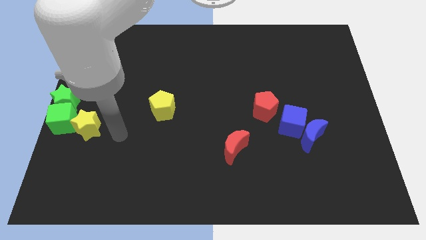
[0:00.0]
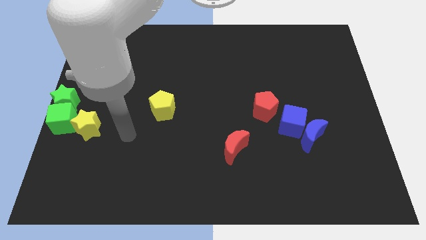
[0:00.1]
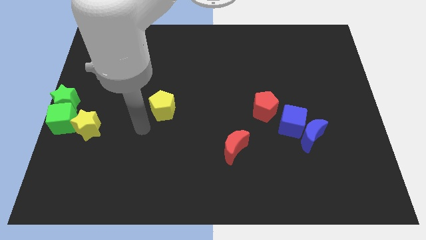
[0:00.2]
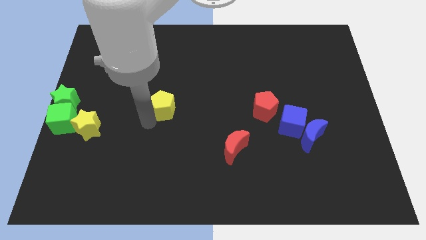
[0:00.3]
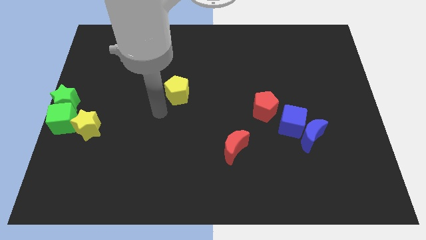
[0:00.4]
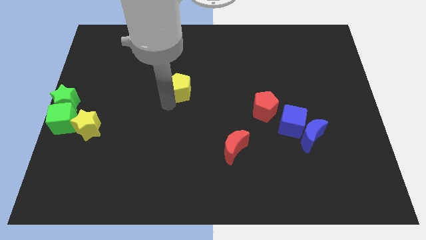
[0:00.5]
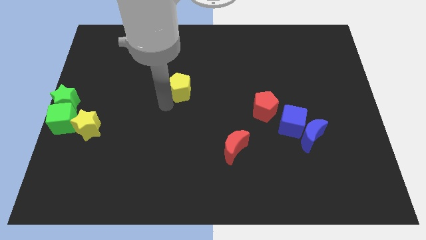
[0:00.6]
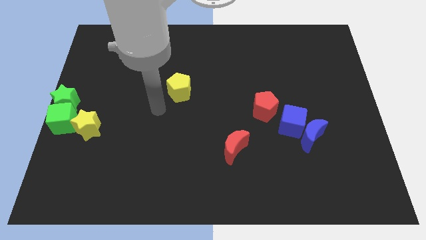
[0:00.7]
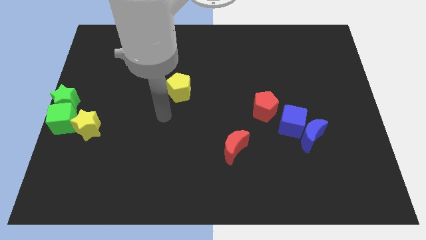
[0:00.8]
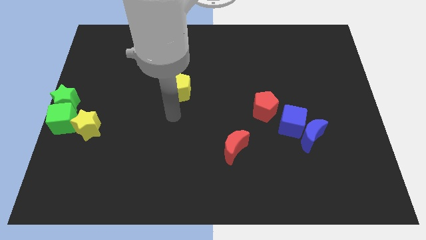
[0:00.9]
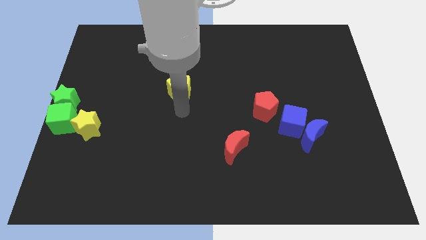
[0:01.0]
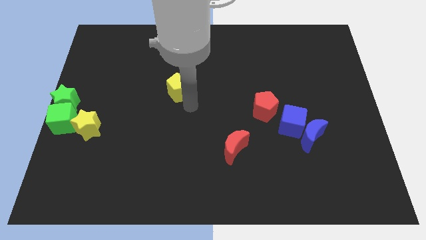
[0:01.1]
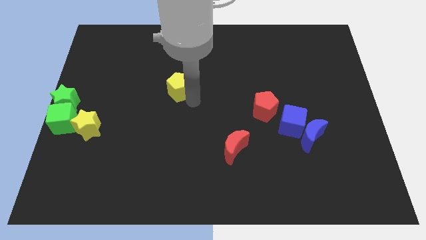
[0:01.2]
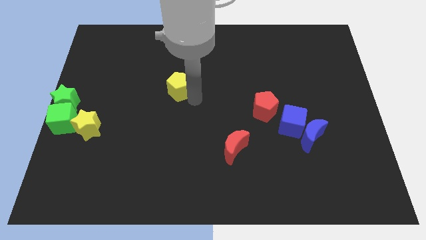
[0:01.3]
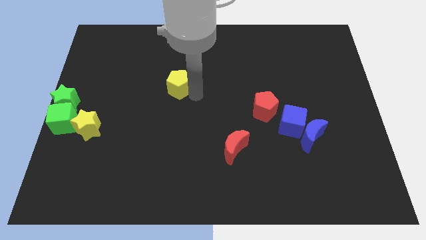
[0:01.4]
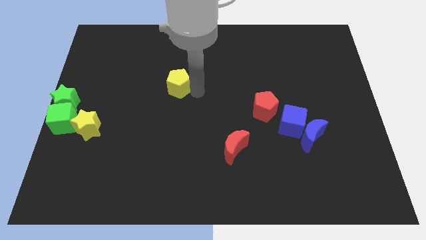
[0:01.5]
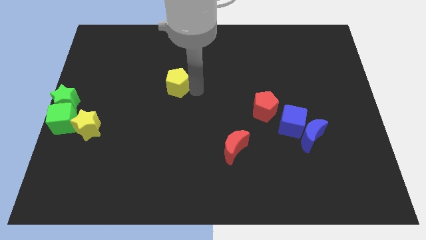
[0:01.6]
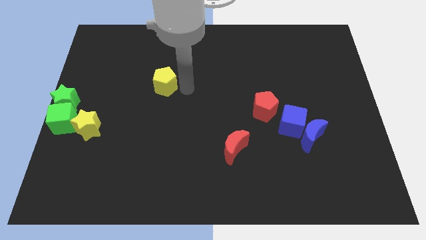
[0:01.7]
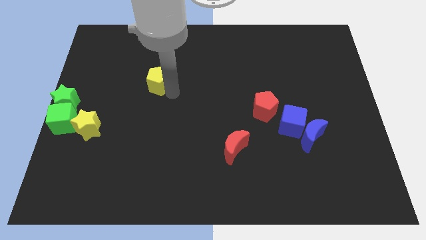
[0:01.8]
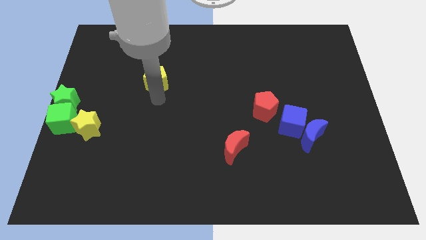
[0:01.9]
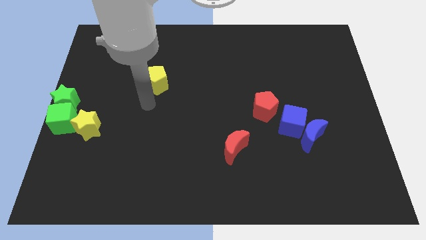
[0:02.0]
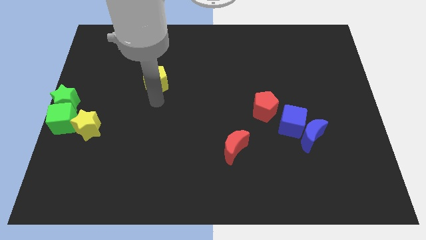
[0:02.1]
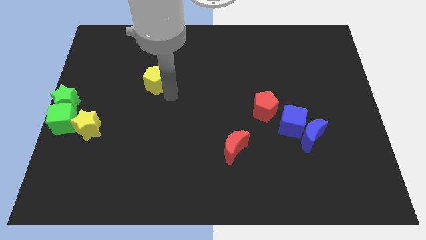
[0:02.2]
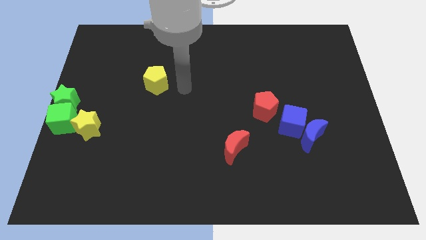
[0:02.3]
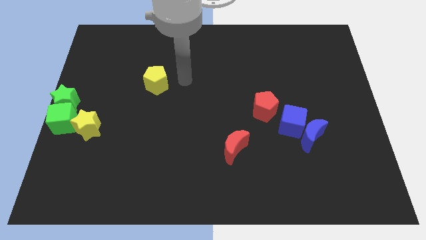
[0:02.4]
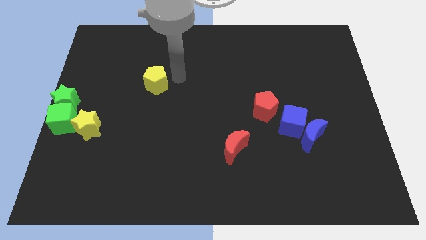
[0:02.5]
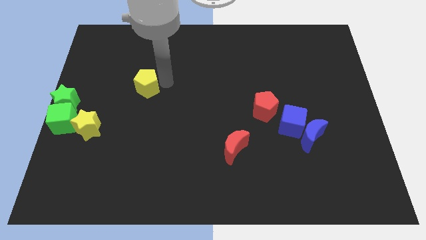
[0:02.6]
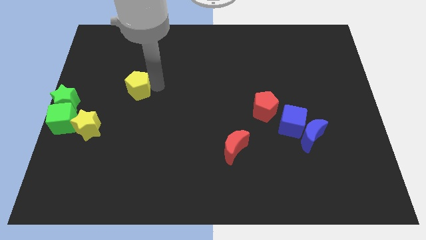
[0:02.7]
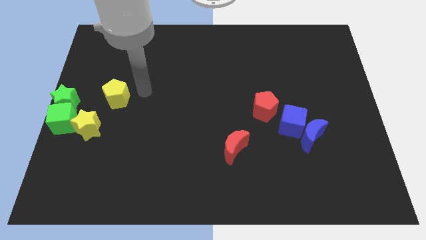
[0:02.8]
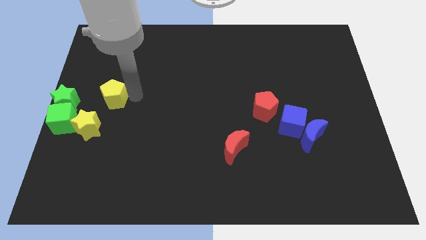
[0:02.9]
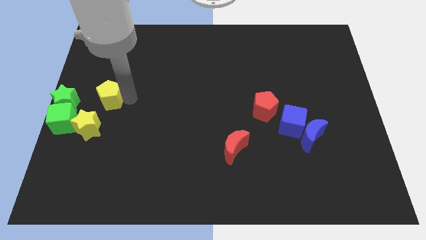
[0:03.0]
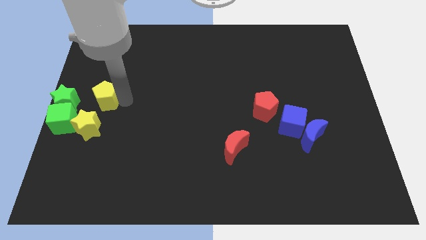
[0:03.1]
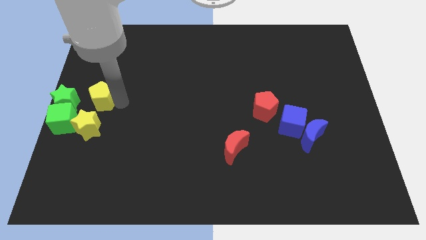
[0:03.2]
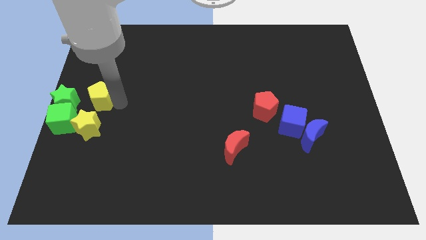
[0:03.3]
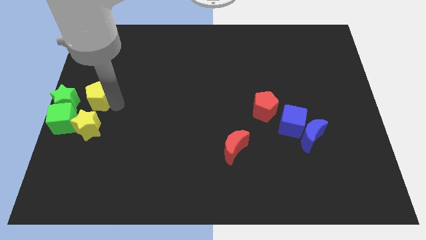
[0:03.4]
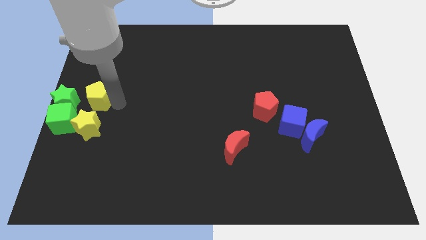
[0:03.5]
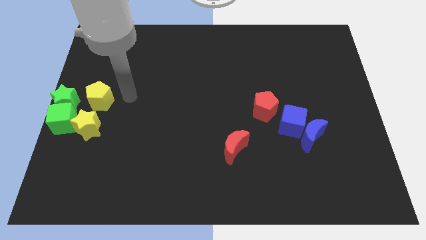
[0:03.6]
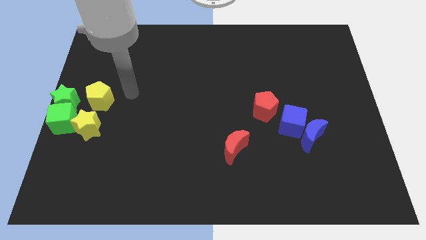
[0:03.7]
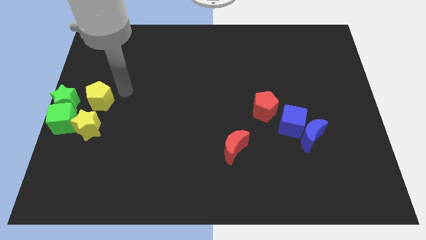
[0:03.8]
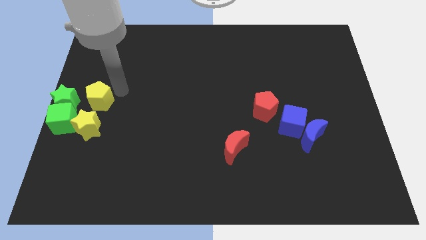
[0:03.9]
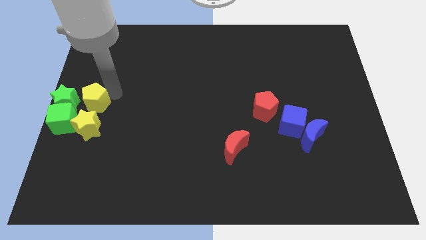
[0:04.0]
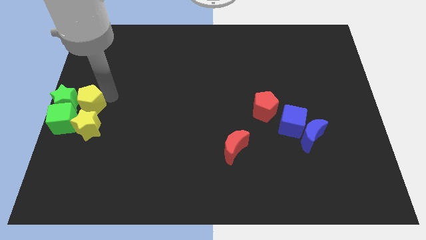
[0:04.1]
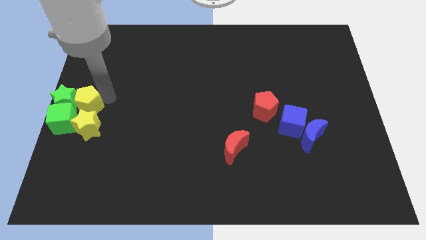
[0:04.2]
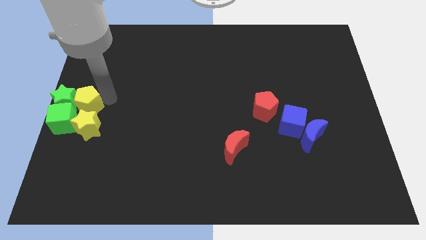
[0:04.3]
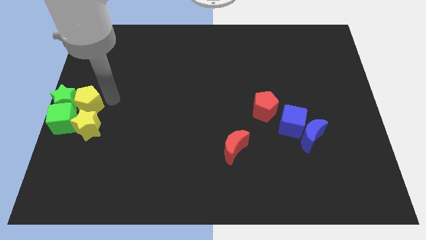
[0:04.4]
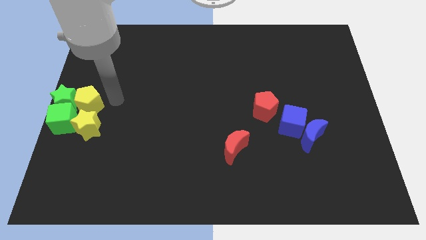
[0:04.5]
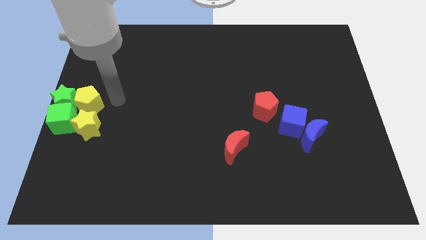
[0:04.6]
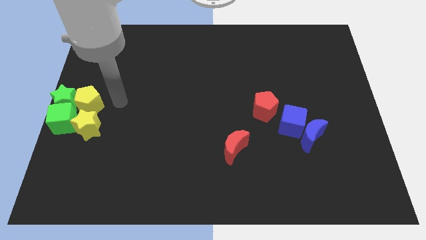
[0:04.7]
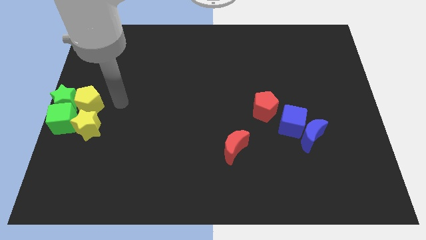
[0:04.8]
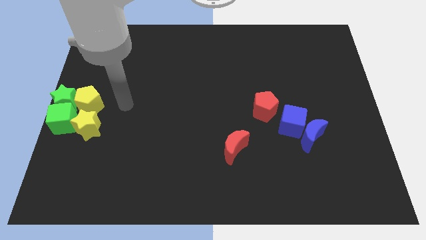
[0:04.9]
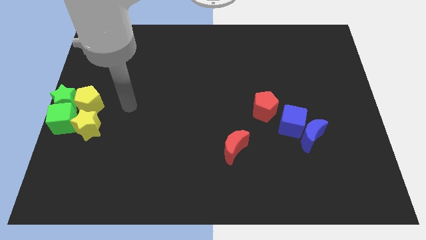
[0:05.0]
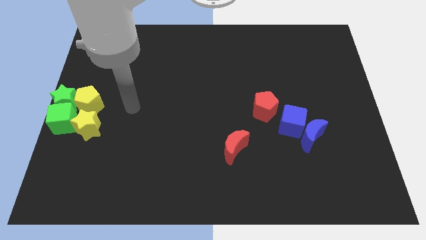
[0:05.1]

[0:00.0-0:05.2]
place yellow pentagon above yellow star

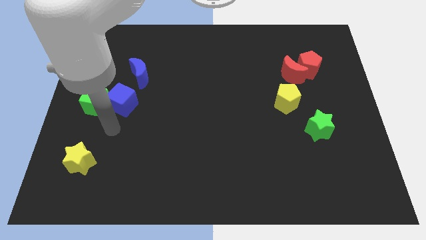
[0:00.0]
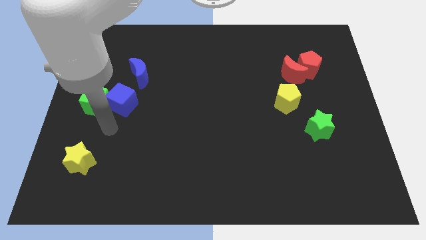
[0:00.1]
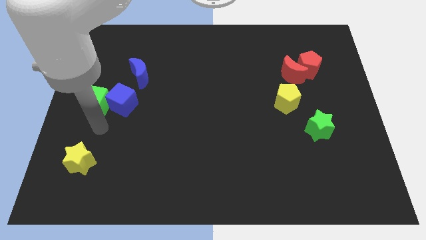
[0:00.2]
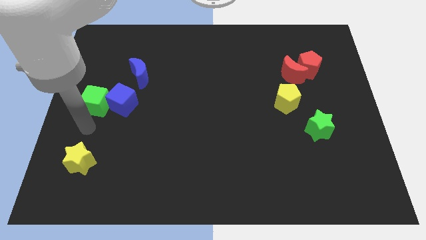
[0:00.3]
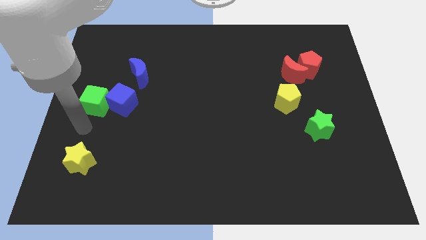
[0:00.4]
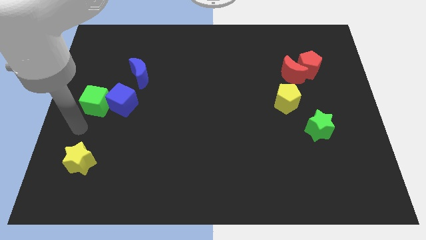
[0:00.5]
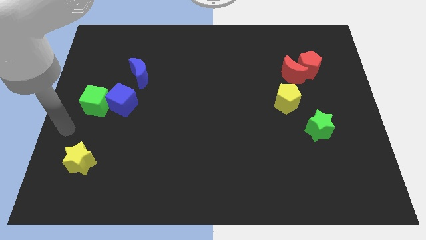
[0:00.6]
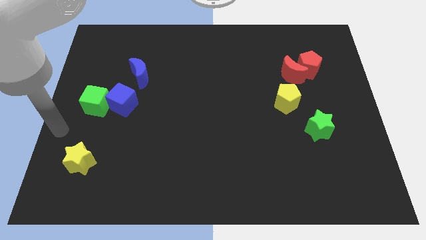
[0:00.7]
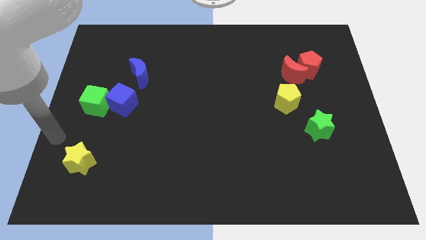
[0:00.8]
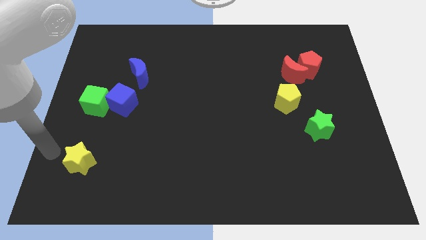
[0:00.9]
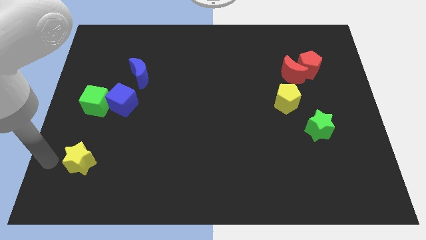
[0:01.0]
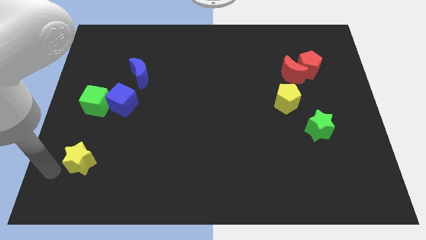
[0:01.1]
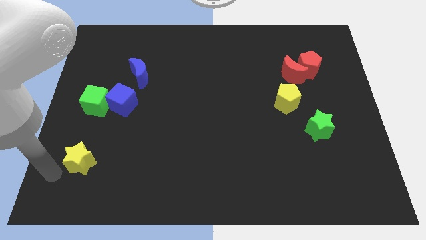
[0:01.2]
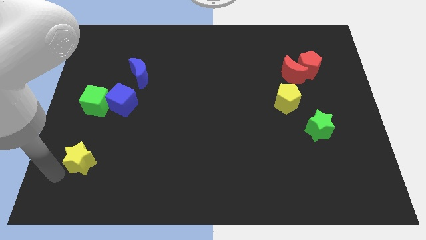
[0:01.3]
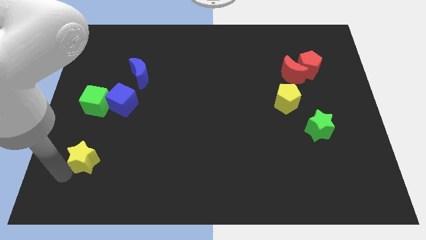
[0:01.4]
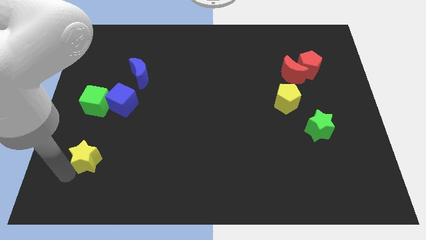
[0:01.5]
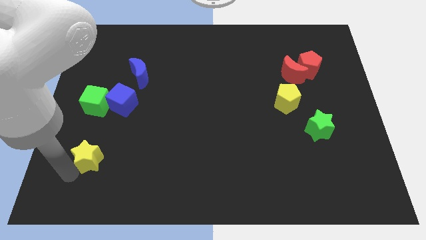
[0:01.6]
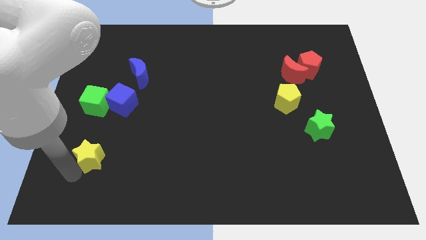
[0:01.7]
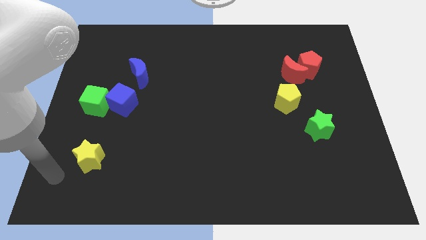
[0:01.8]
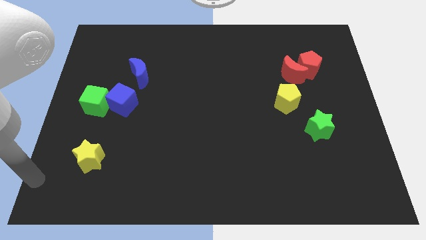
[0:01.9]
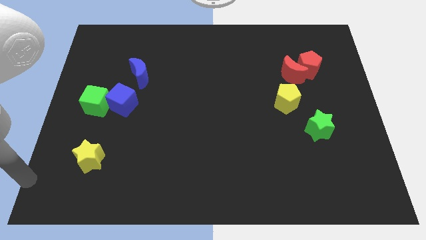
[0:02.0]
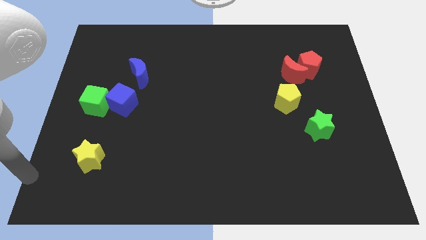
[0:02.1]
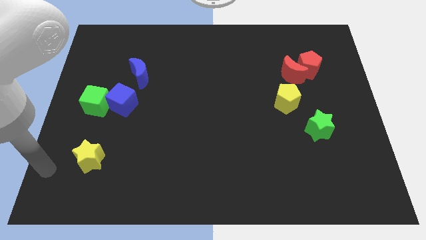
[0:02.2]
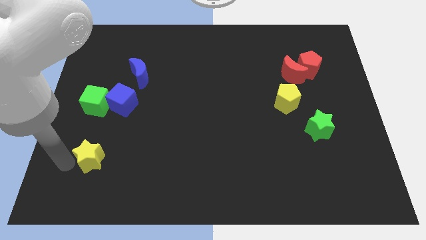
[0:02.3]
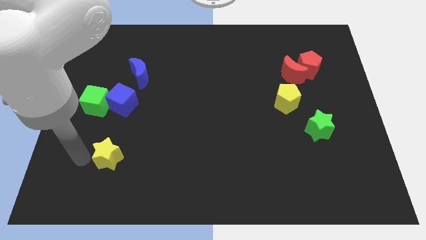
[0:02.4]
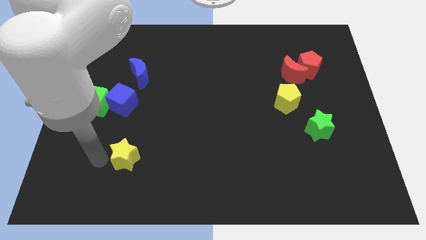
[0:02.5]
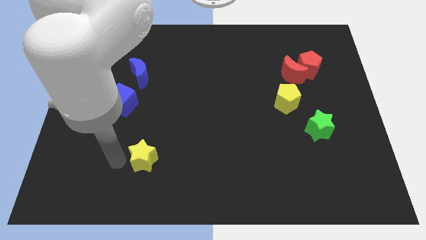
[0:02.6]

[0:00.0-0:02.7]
slightly push the yellow star towards the bottom of the board

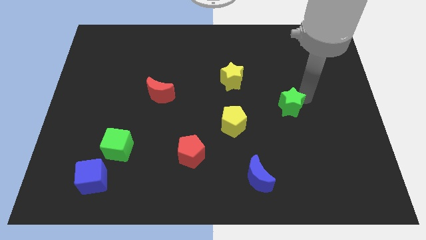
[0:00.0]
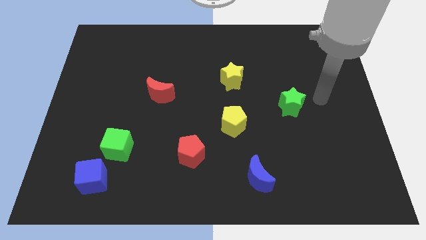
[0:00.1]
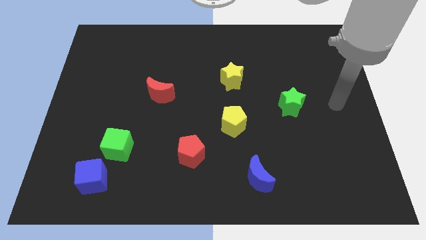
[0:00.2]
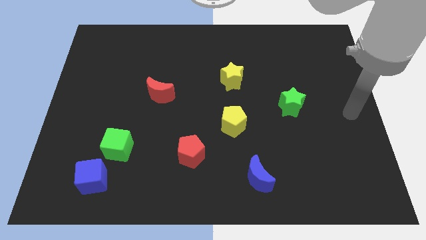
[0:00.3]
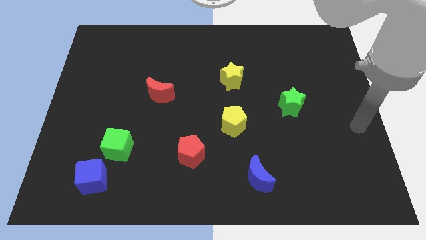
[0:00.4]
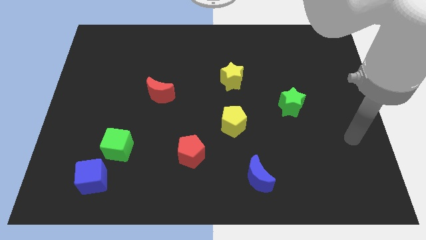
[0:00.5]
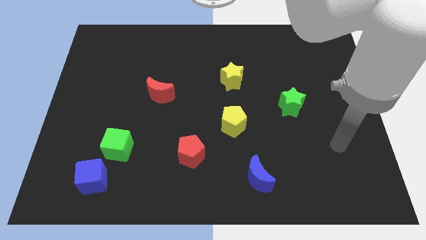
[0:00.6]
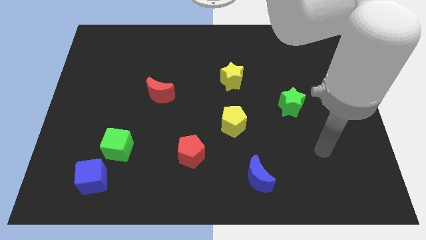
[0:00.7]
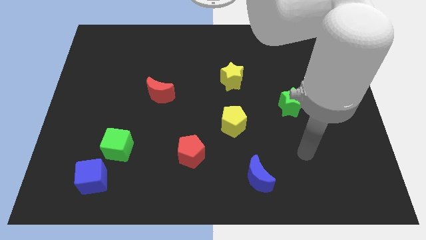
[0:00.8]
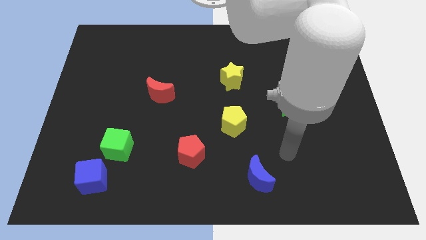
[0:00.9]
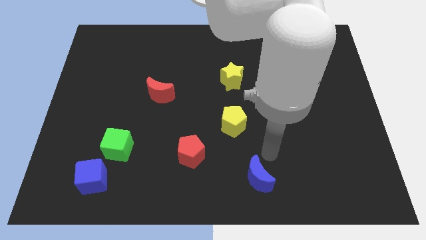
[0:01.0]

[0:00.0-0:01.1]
move your arm to the top of blue crescent
